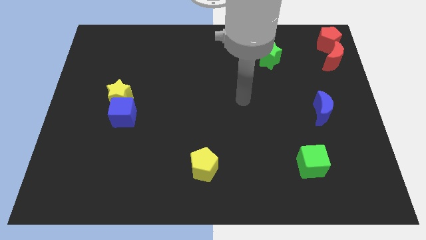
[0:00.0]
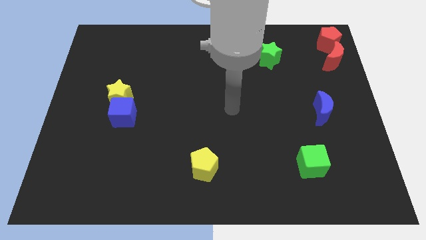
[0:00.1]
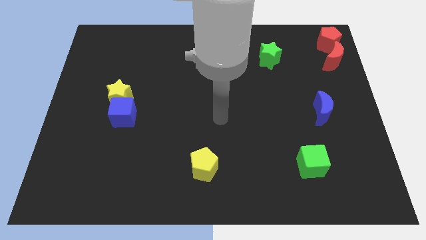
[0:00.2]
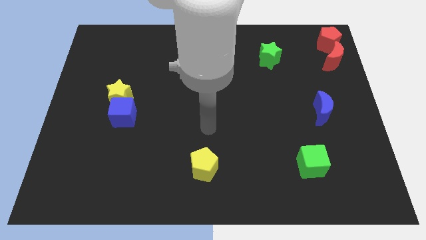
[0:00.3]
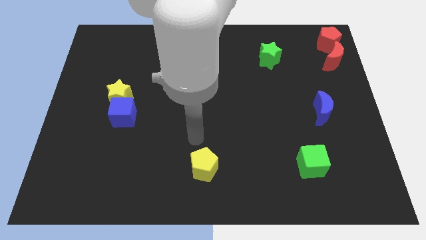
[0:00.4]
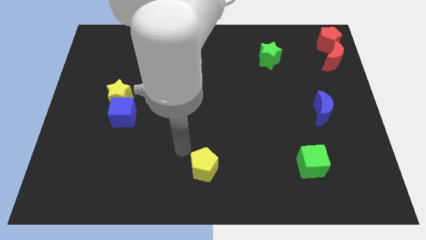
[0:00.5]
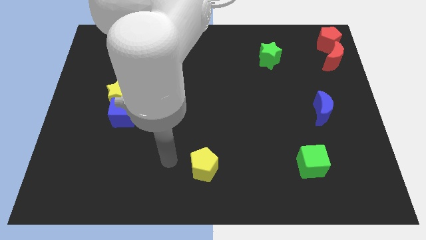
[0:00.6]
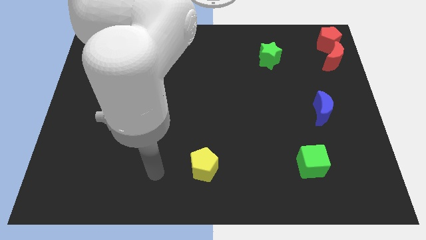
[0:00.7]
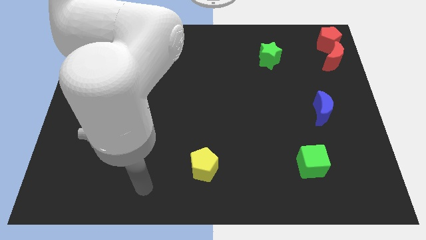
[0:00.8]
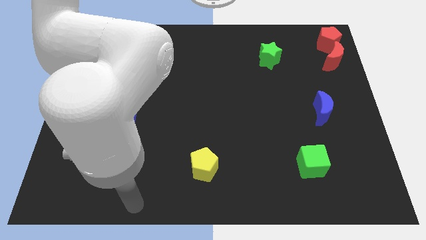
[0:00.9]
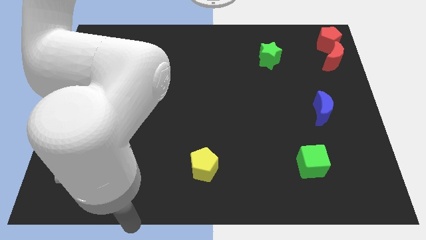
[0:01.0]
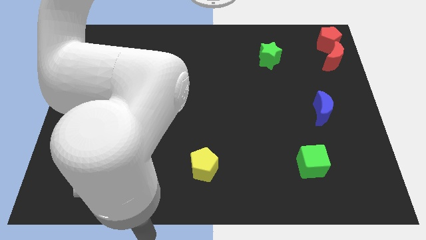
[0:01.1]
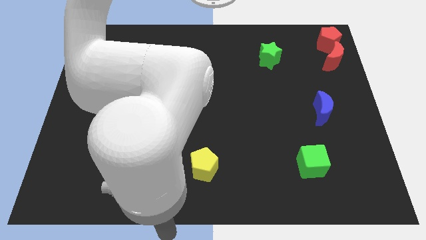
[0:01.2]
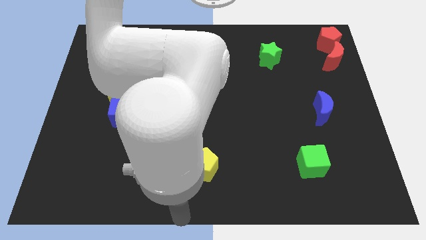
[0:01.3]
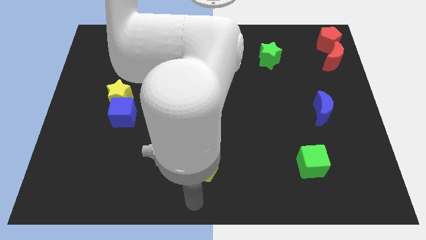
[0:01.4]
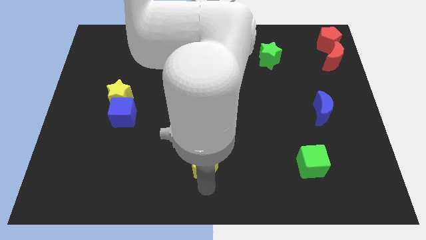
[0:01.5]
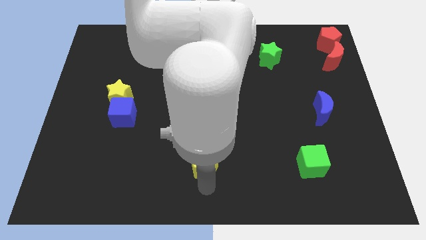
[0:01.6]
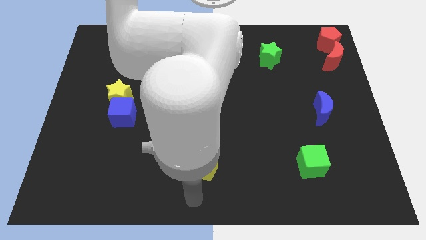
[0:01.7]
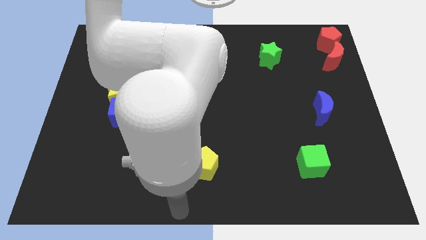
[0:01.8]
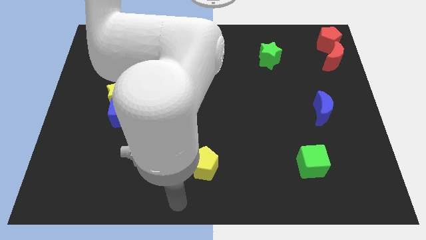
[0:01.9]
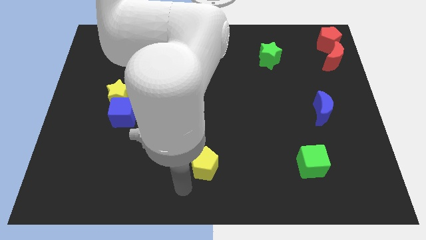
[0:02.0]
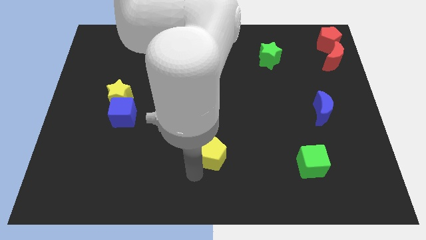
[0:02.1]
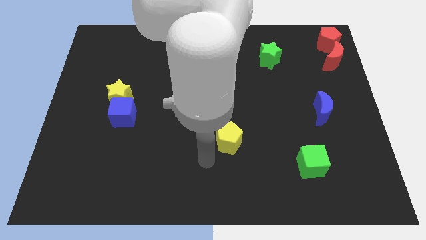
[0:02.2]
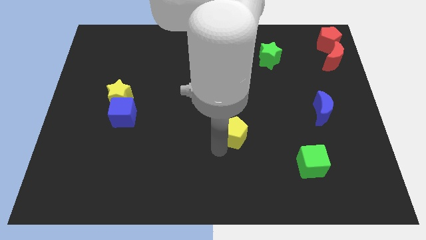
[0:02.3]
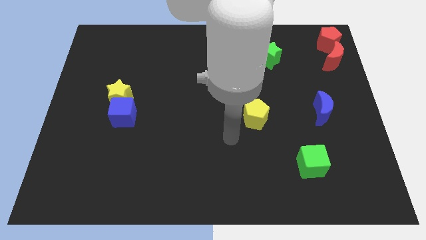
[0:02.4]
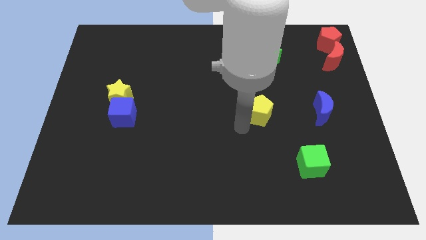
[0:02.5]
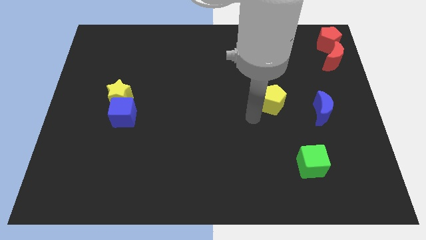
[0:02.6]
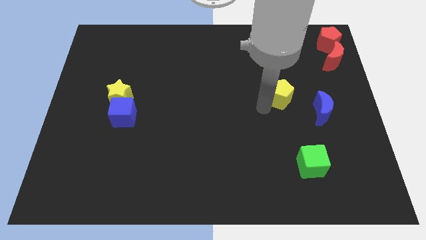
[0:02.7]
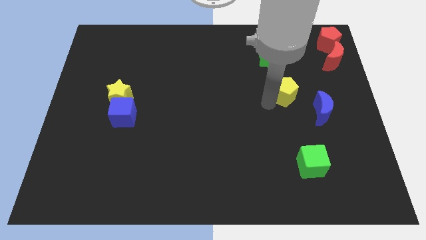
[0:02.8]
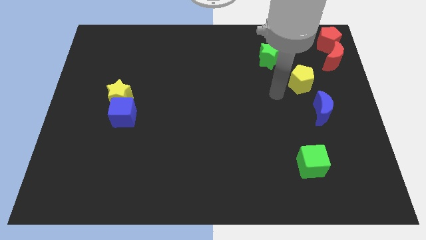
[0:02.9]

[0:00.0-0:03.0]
move the yellow pentagon at the top left of the blue crescent

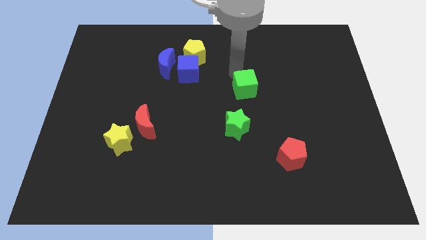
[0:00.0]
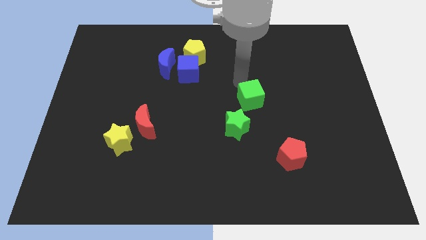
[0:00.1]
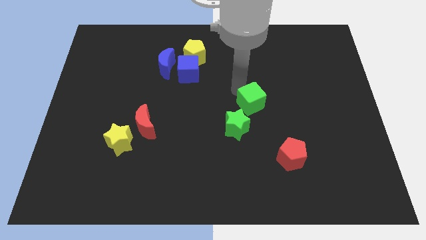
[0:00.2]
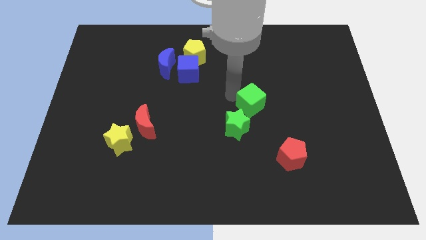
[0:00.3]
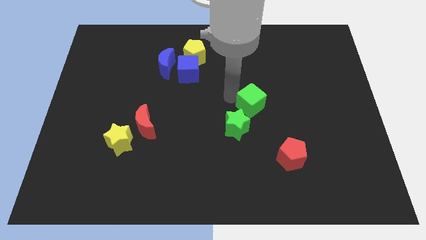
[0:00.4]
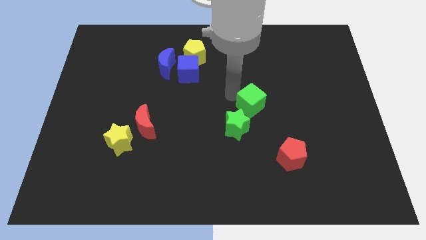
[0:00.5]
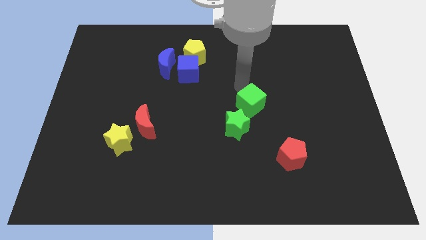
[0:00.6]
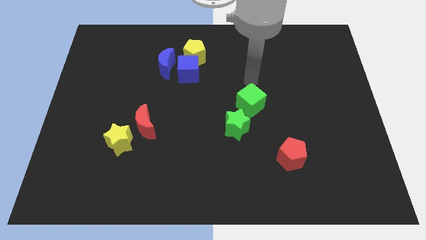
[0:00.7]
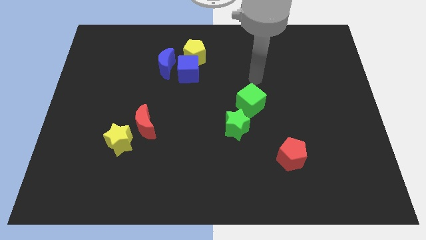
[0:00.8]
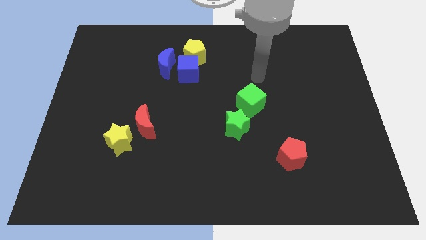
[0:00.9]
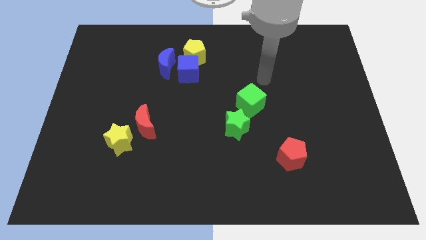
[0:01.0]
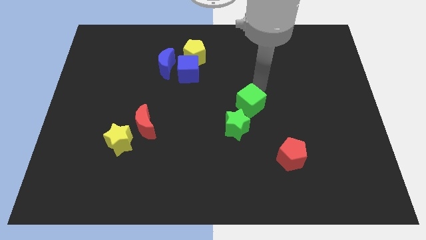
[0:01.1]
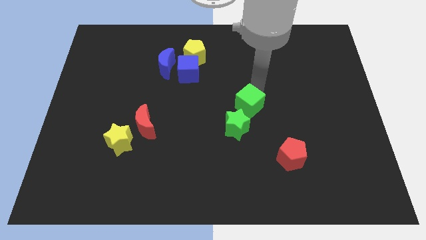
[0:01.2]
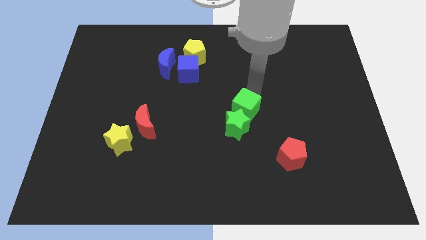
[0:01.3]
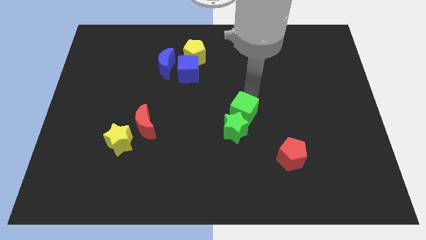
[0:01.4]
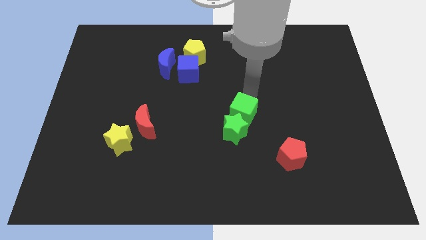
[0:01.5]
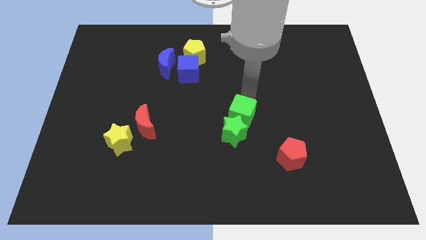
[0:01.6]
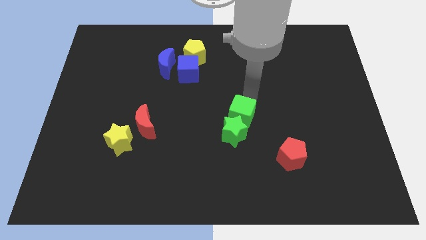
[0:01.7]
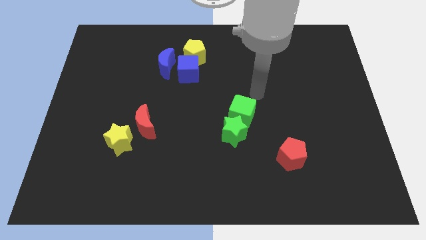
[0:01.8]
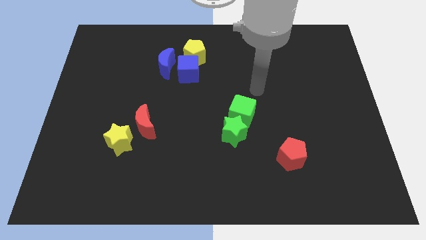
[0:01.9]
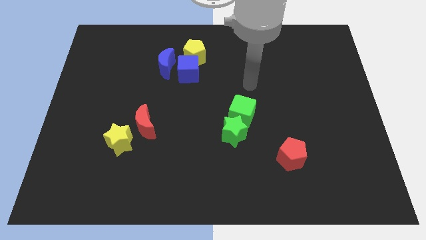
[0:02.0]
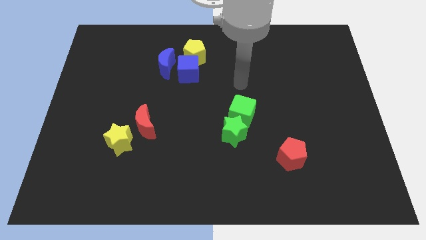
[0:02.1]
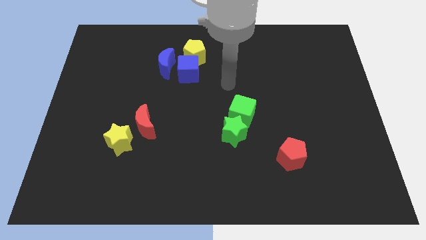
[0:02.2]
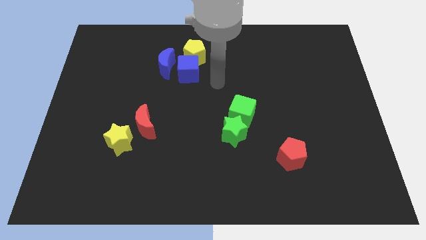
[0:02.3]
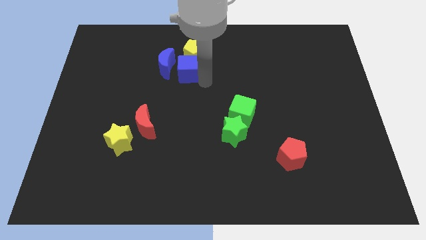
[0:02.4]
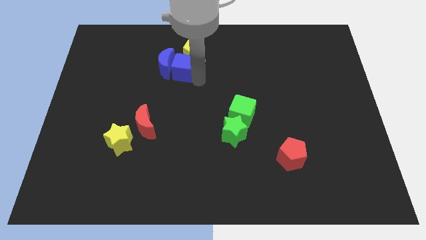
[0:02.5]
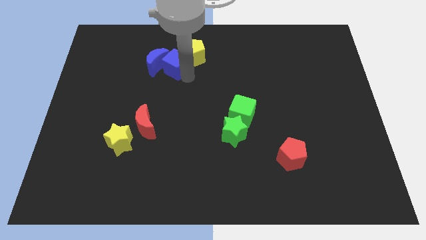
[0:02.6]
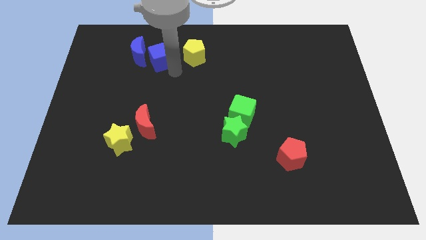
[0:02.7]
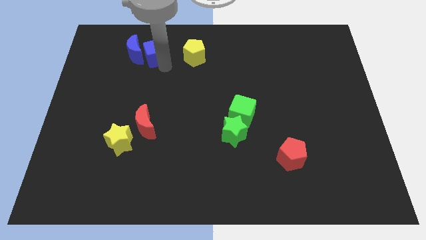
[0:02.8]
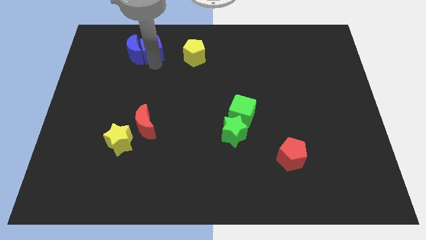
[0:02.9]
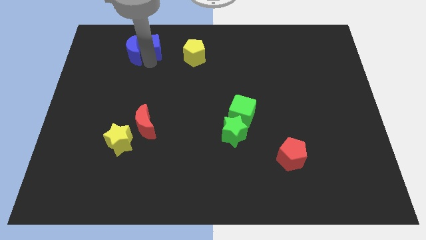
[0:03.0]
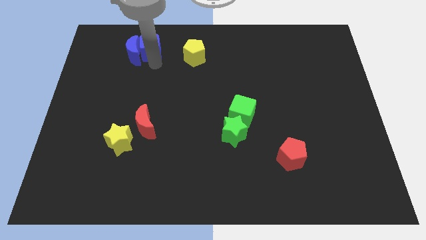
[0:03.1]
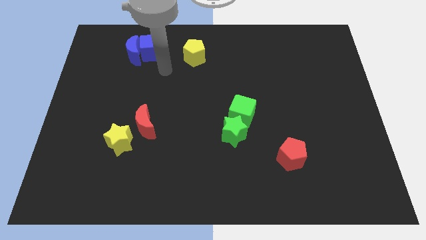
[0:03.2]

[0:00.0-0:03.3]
push the green cube into the green star

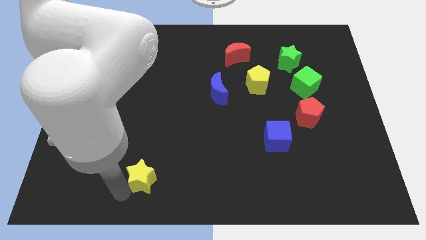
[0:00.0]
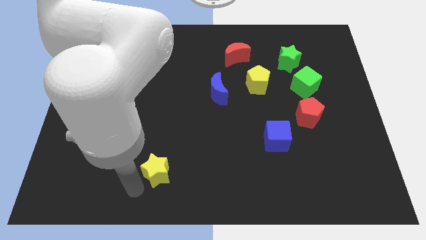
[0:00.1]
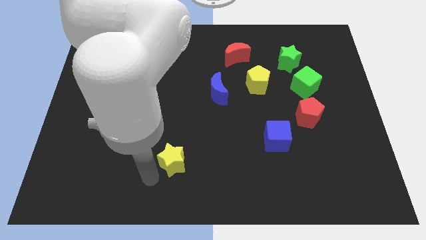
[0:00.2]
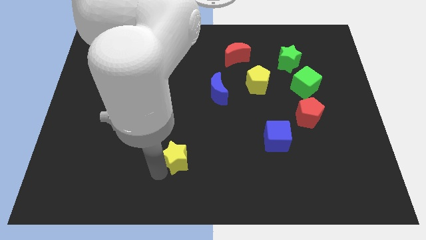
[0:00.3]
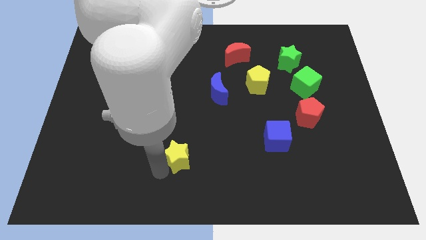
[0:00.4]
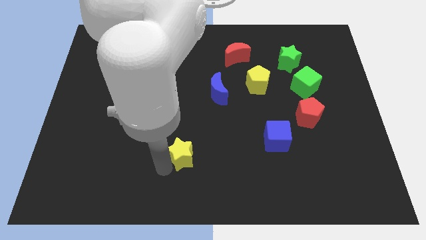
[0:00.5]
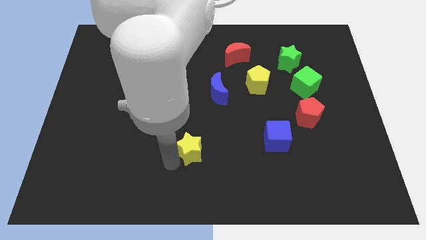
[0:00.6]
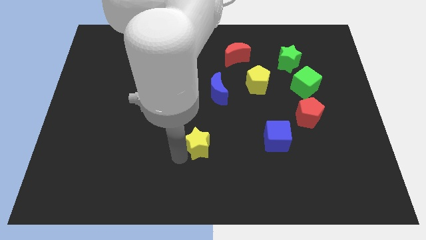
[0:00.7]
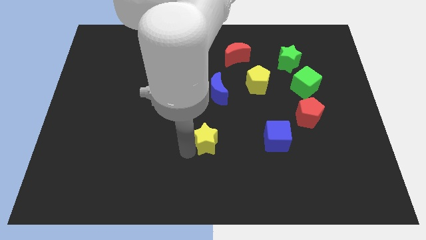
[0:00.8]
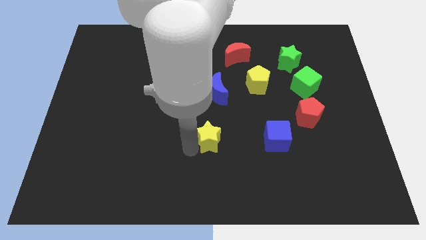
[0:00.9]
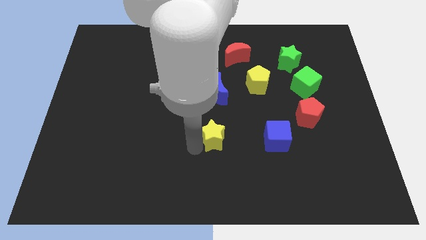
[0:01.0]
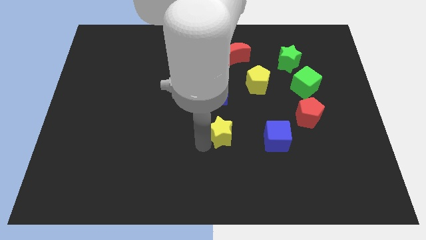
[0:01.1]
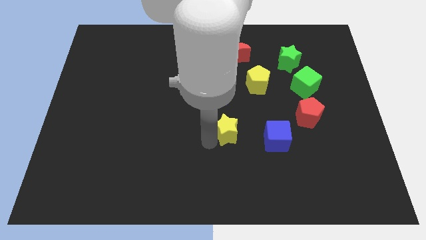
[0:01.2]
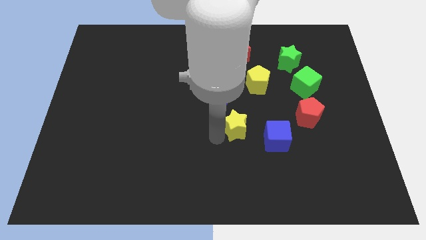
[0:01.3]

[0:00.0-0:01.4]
drag the yellow star diagonal to the left to the blue cube

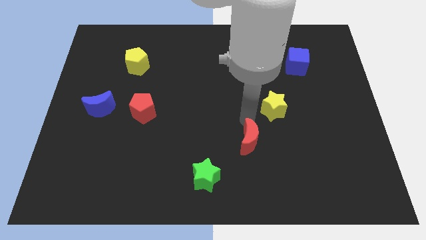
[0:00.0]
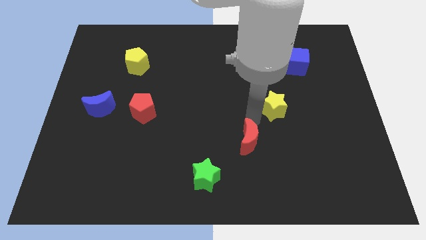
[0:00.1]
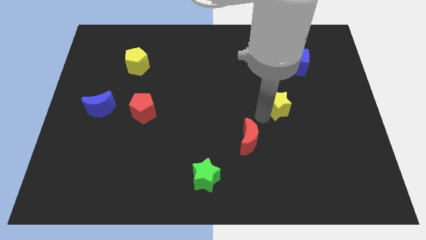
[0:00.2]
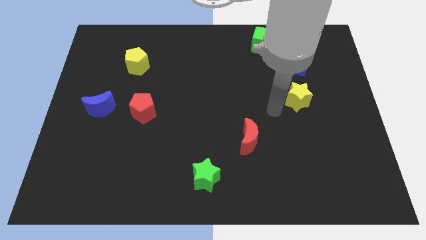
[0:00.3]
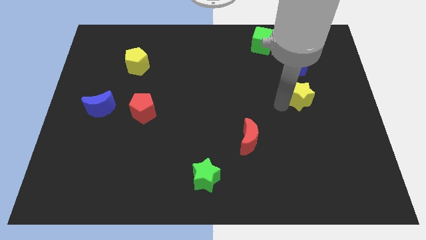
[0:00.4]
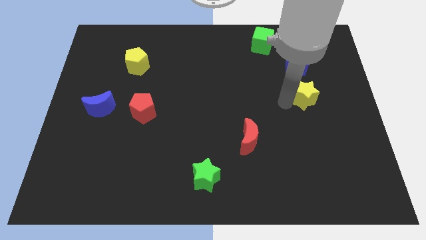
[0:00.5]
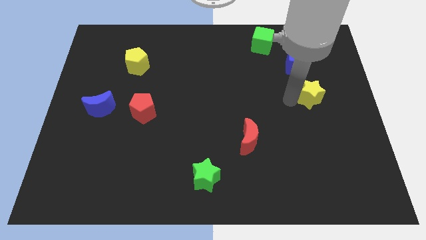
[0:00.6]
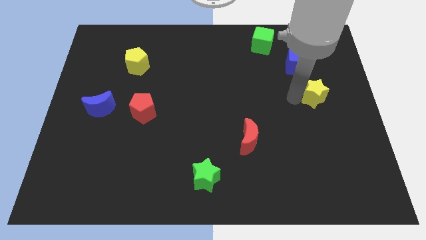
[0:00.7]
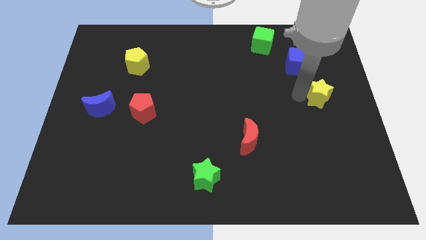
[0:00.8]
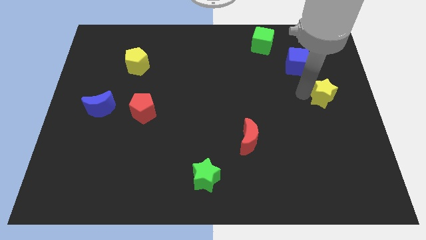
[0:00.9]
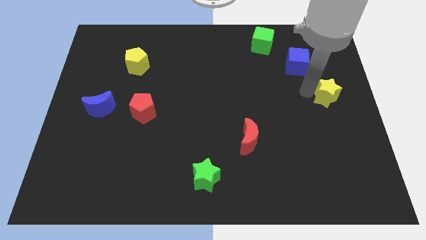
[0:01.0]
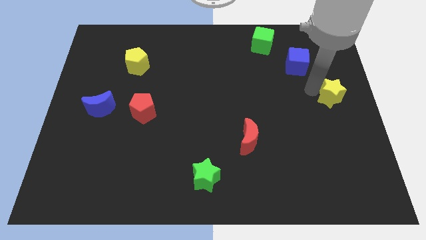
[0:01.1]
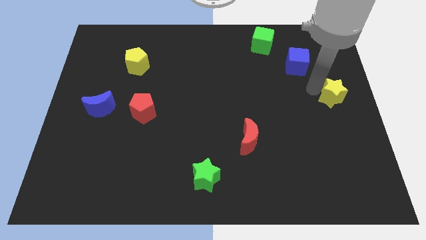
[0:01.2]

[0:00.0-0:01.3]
push the yellow star diagonally to the bottom of the blue cube
